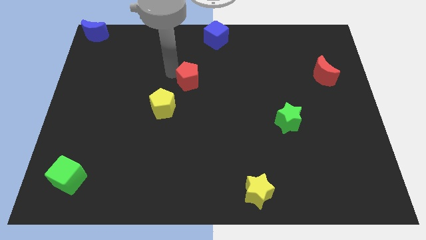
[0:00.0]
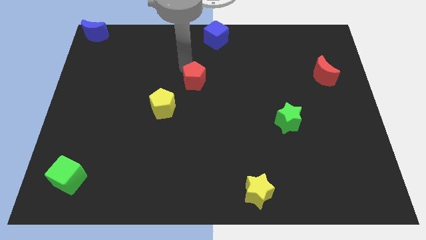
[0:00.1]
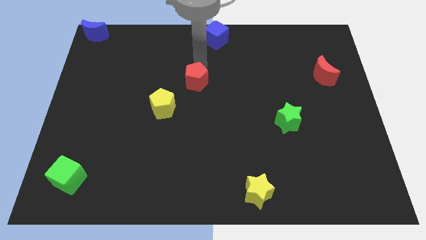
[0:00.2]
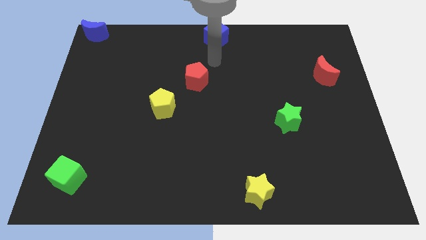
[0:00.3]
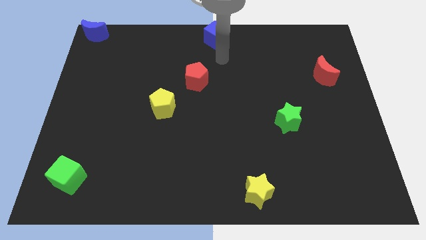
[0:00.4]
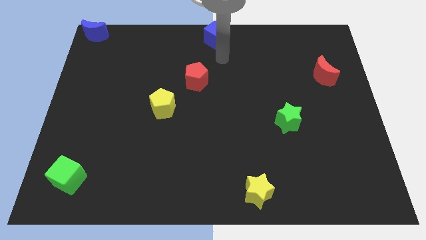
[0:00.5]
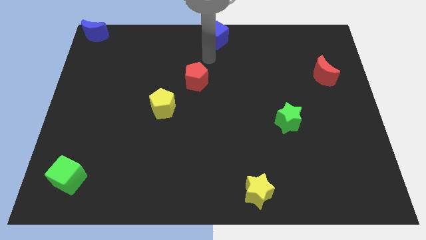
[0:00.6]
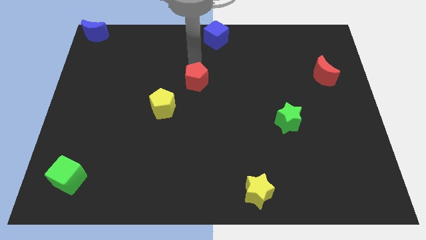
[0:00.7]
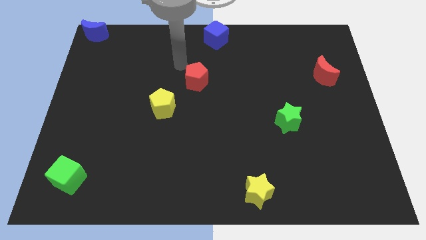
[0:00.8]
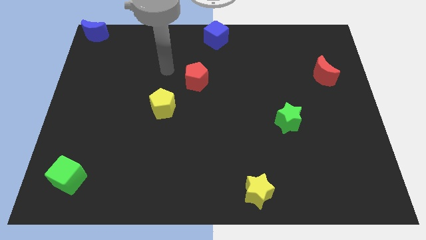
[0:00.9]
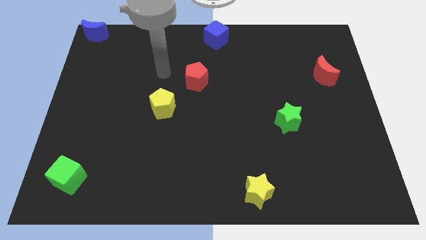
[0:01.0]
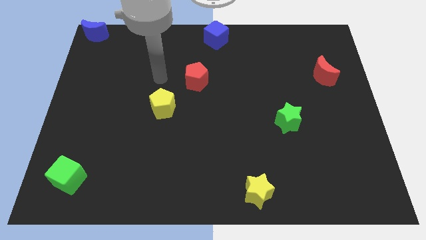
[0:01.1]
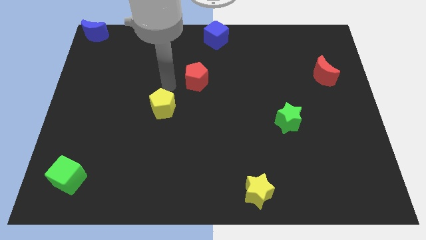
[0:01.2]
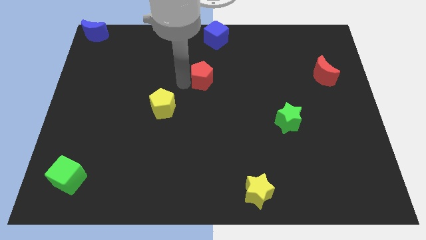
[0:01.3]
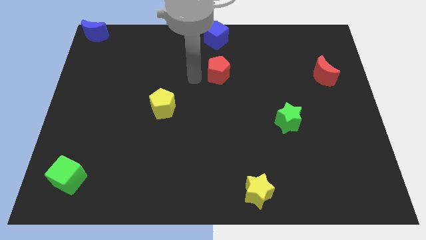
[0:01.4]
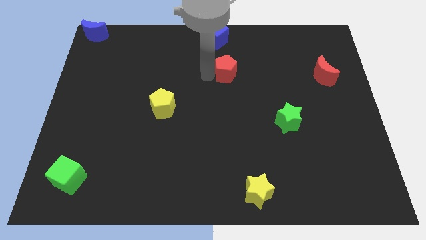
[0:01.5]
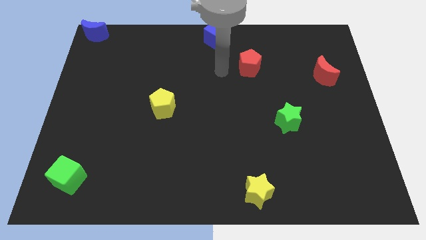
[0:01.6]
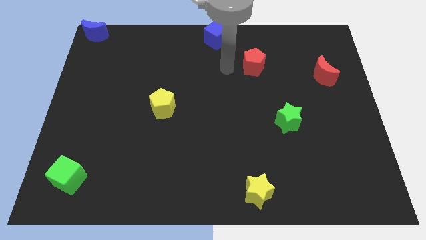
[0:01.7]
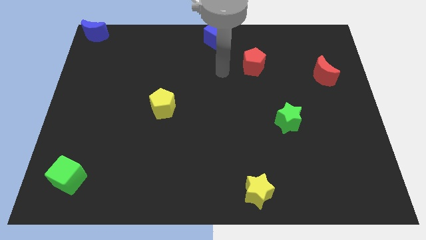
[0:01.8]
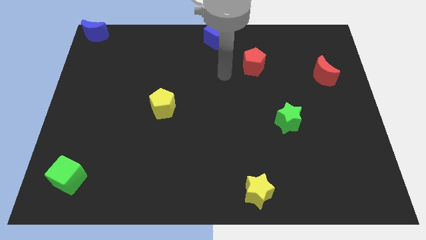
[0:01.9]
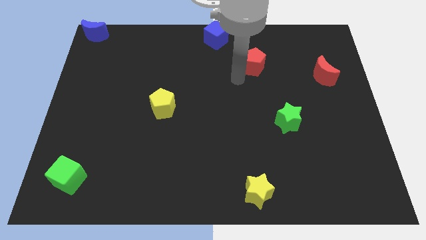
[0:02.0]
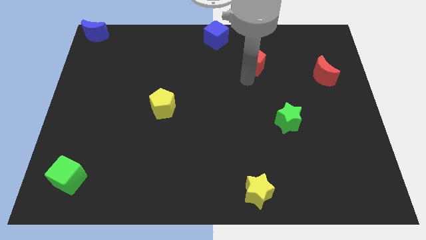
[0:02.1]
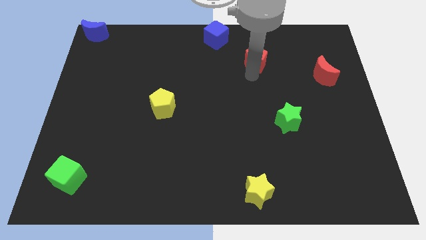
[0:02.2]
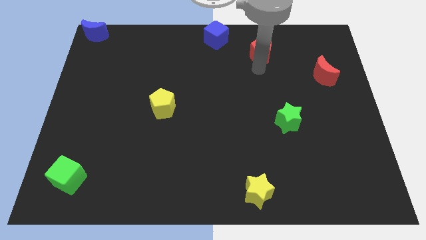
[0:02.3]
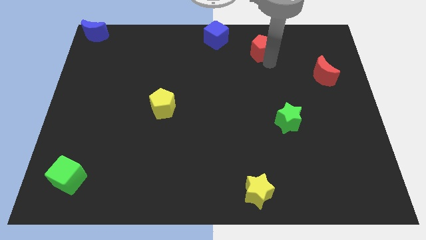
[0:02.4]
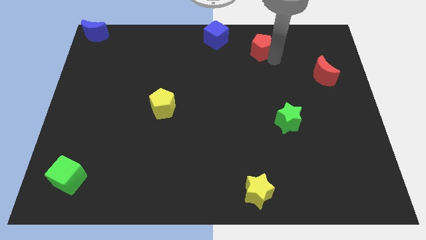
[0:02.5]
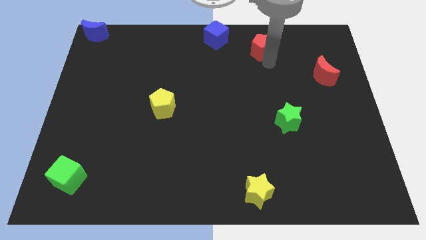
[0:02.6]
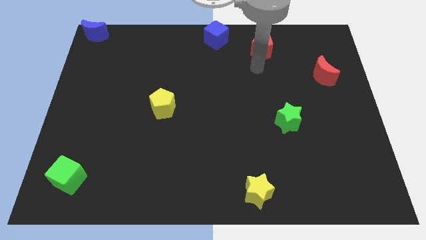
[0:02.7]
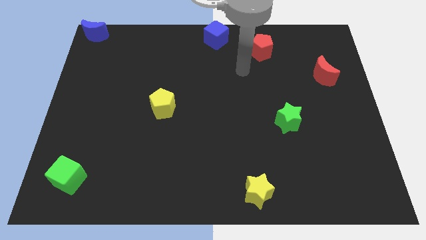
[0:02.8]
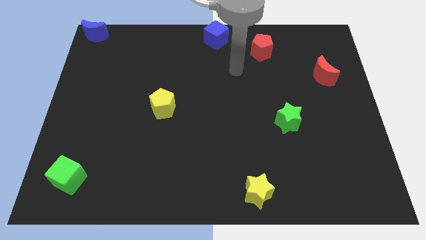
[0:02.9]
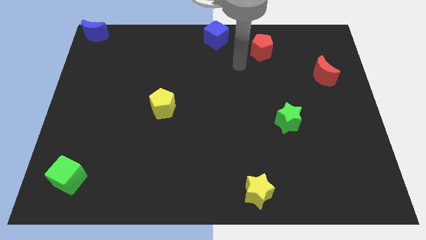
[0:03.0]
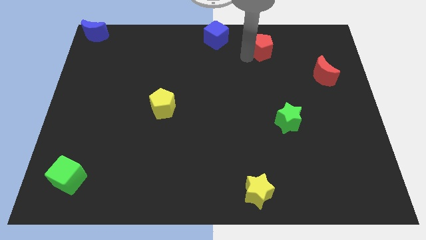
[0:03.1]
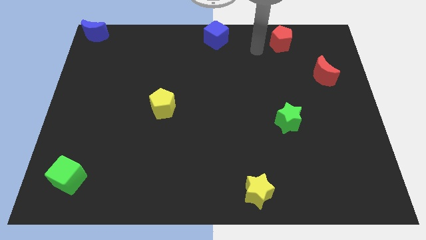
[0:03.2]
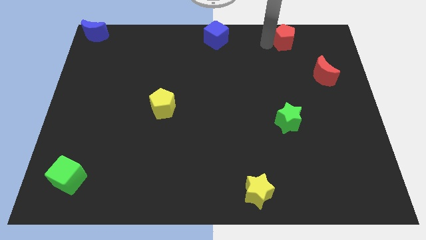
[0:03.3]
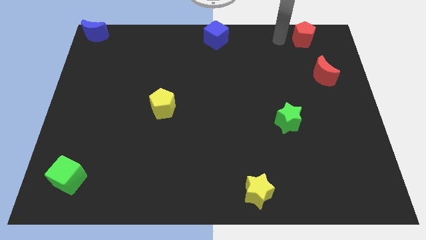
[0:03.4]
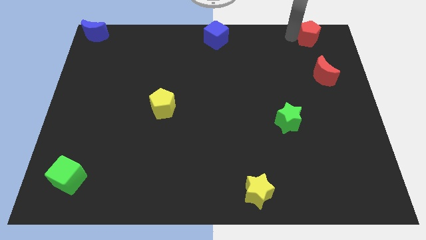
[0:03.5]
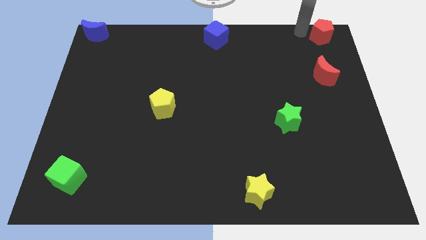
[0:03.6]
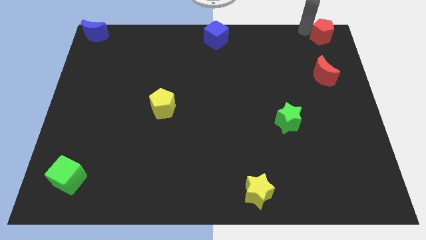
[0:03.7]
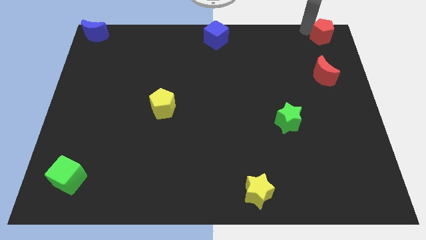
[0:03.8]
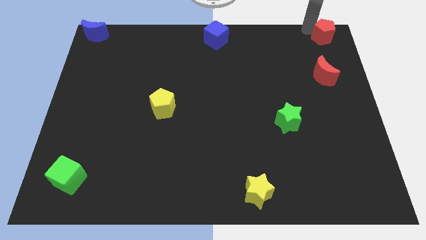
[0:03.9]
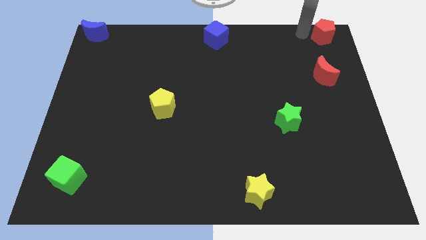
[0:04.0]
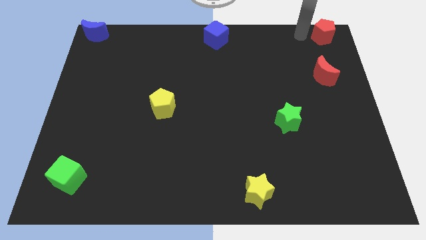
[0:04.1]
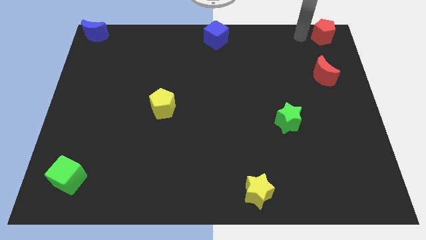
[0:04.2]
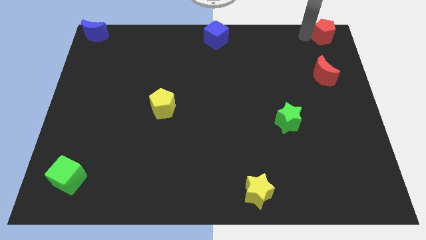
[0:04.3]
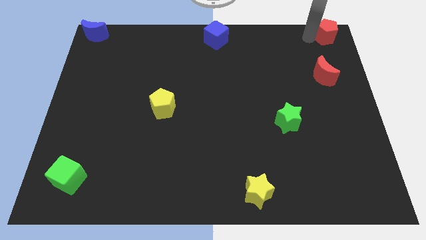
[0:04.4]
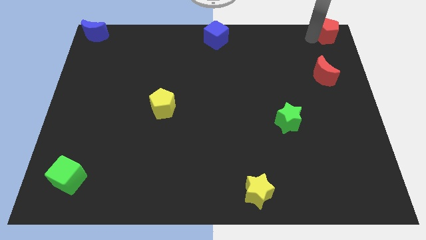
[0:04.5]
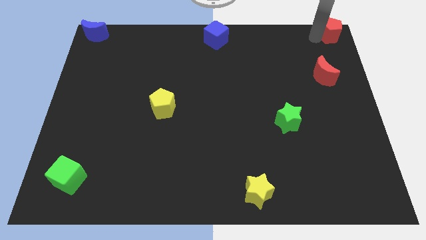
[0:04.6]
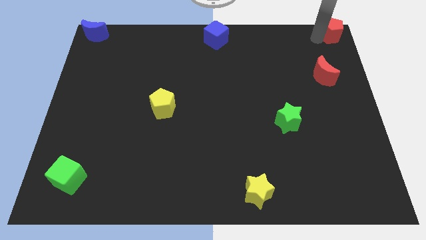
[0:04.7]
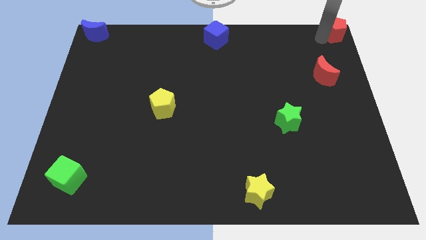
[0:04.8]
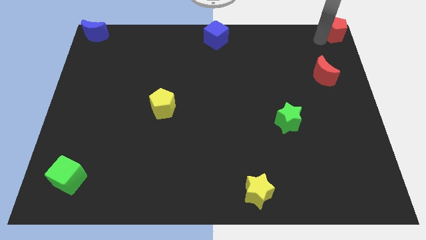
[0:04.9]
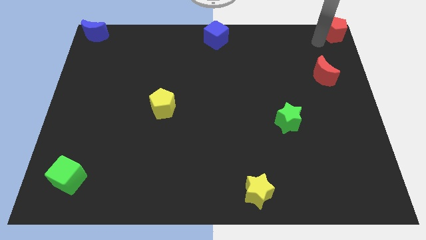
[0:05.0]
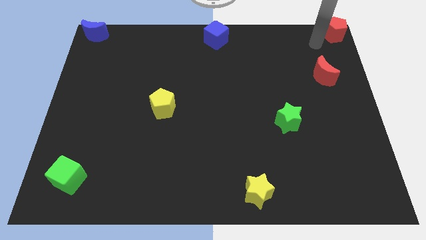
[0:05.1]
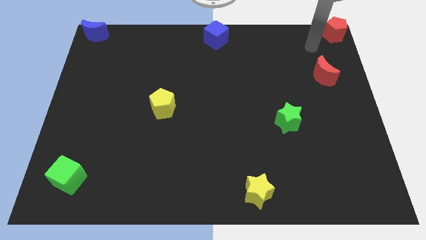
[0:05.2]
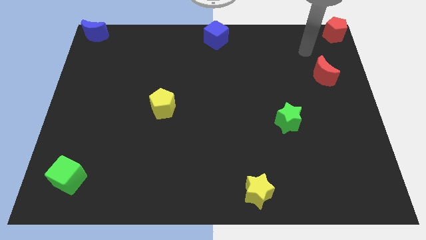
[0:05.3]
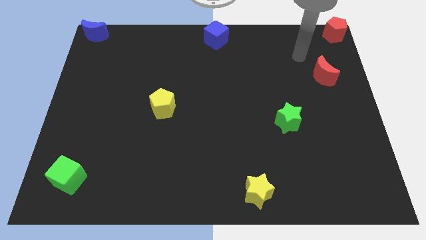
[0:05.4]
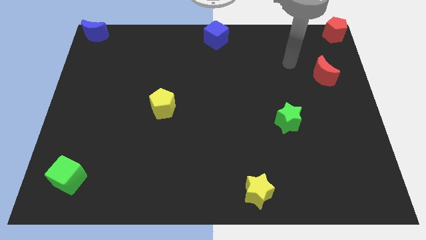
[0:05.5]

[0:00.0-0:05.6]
place the red pentagon at the top right corner of the board

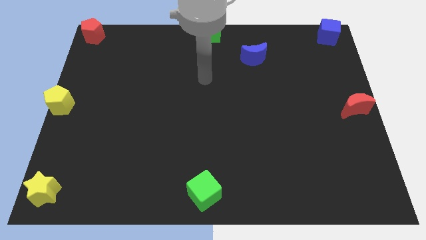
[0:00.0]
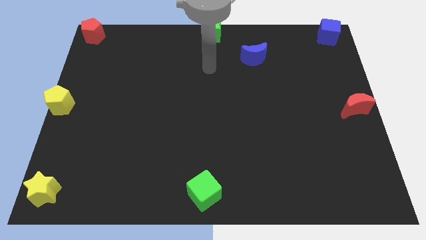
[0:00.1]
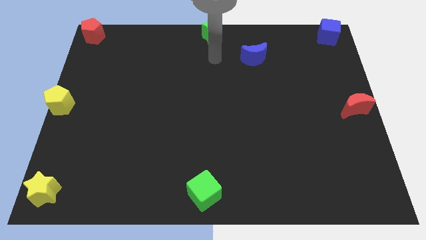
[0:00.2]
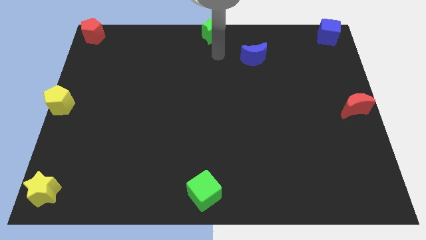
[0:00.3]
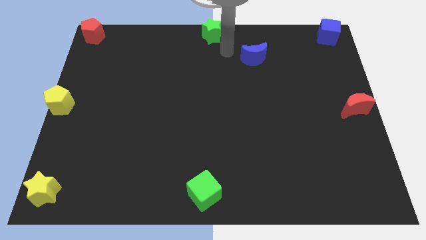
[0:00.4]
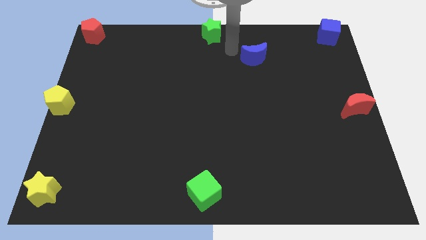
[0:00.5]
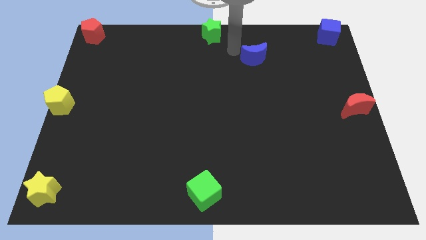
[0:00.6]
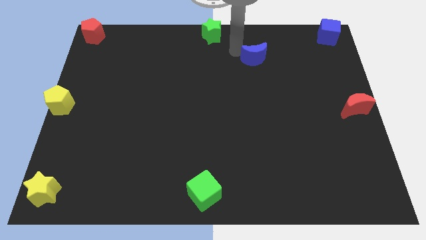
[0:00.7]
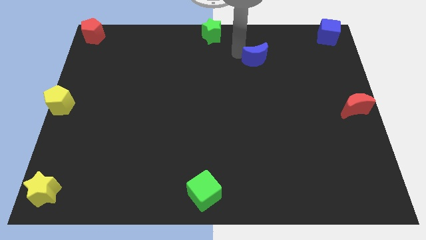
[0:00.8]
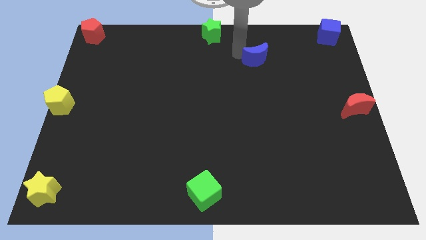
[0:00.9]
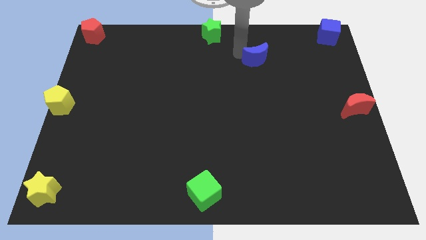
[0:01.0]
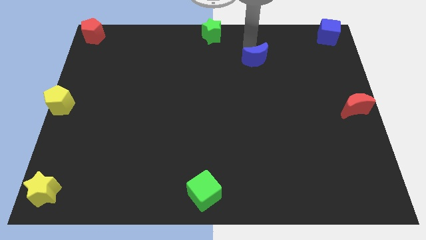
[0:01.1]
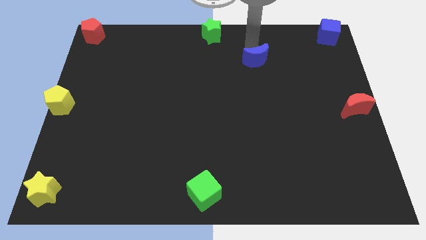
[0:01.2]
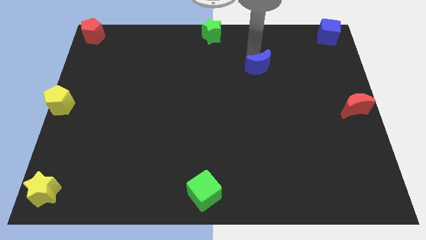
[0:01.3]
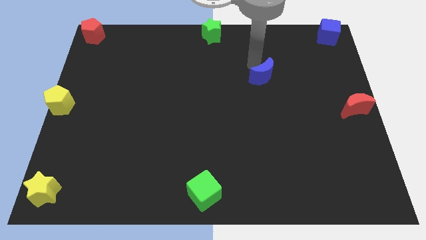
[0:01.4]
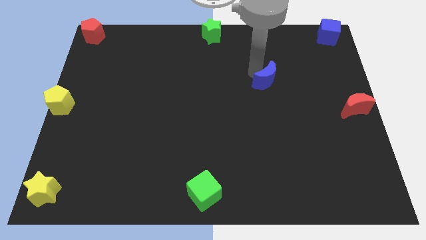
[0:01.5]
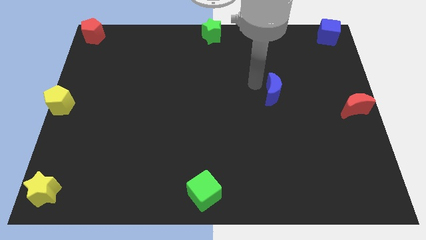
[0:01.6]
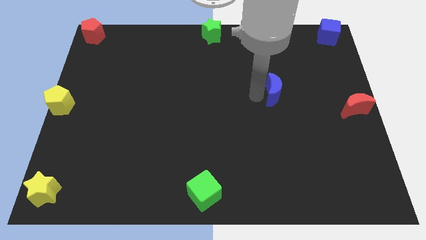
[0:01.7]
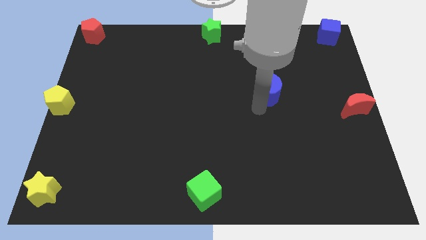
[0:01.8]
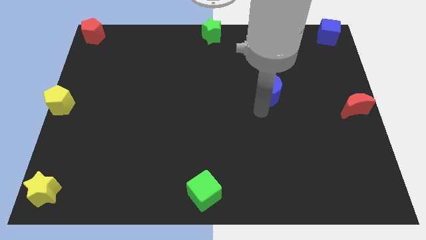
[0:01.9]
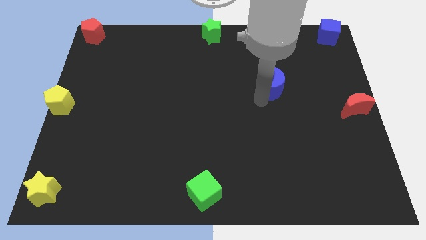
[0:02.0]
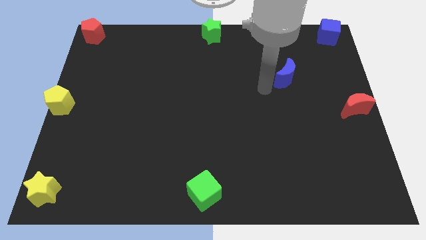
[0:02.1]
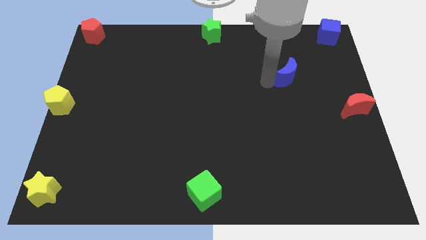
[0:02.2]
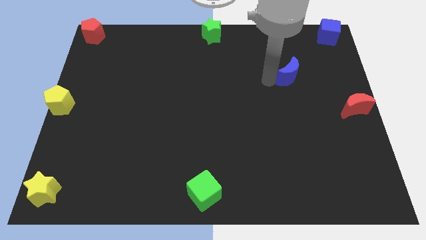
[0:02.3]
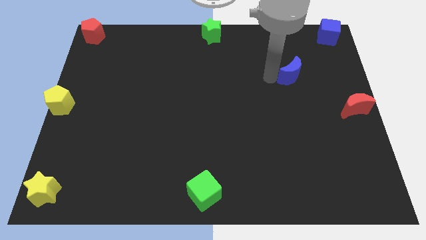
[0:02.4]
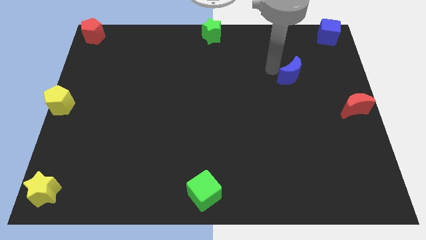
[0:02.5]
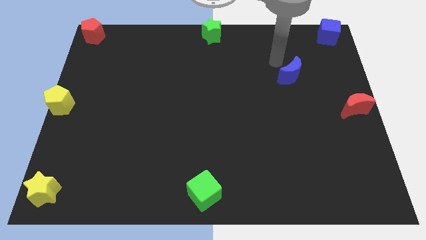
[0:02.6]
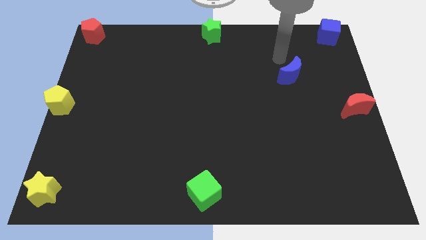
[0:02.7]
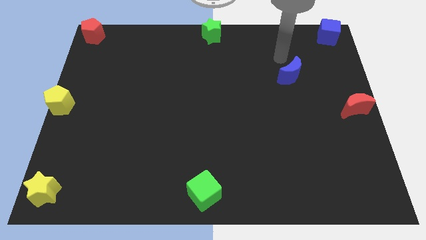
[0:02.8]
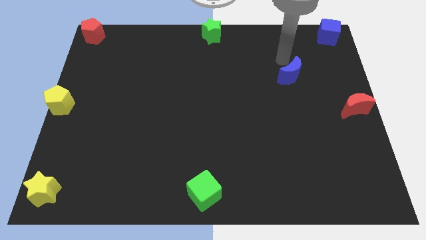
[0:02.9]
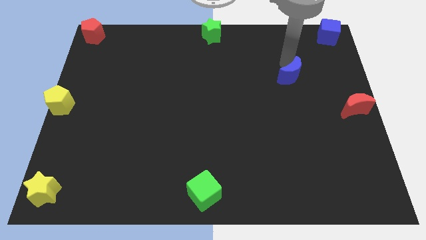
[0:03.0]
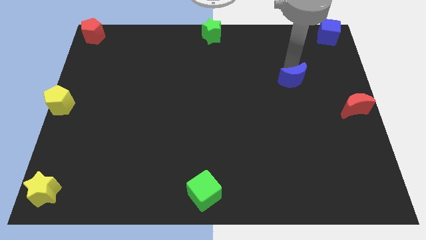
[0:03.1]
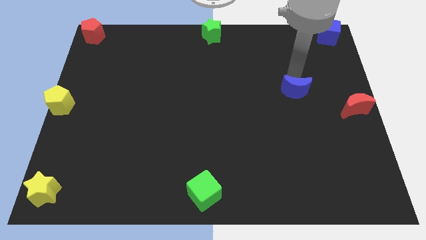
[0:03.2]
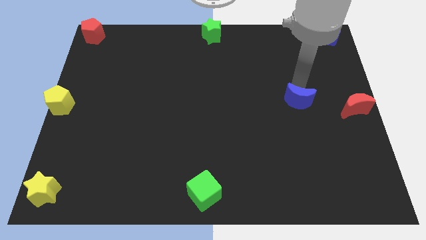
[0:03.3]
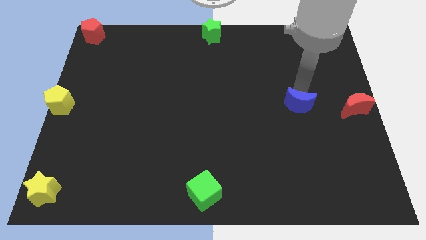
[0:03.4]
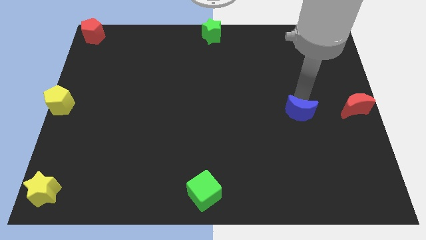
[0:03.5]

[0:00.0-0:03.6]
place the blue moon parallel to red moon
